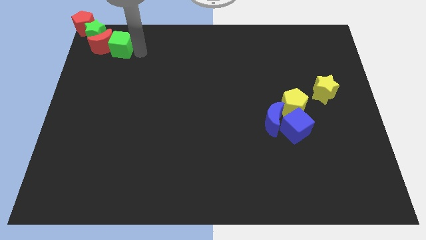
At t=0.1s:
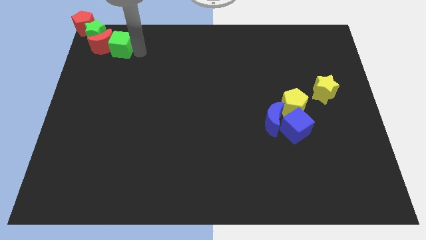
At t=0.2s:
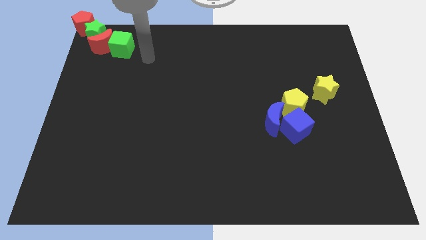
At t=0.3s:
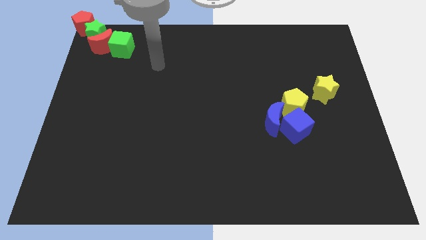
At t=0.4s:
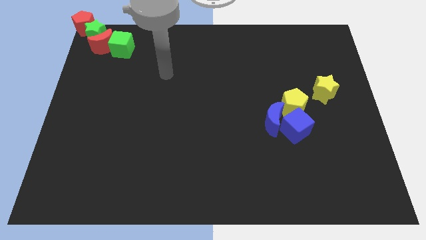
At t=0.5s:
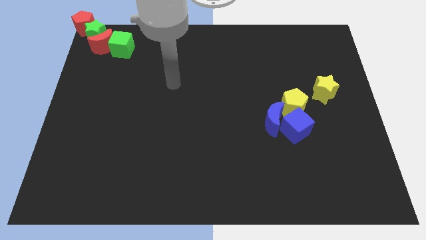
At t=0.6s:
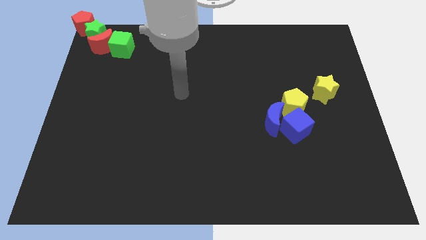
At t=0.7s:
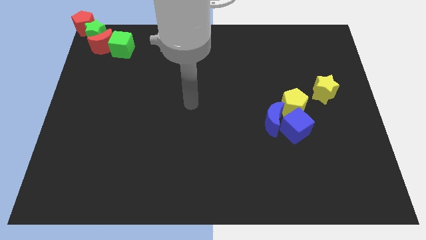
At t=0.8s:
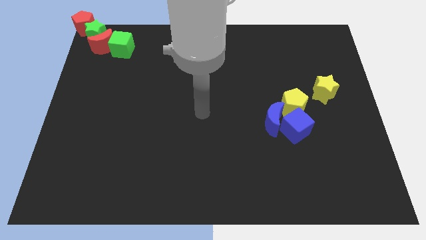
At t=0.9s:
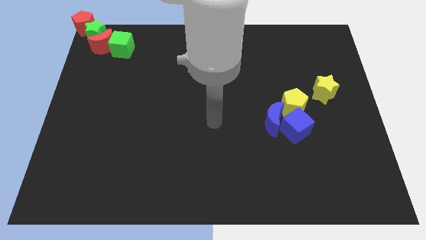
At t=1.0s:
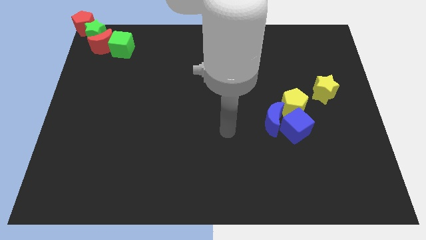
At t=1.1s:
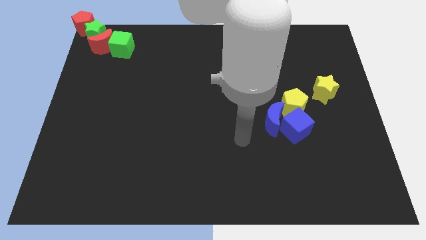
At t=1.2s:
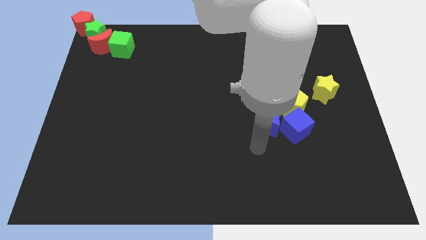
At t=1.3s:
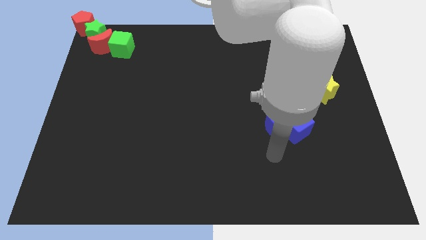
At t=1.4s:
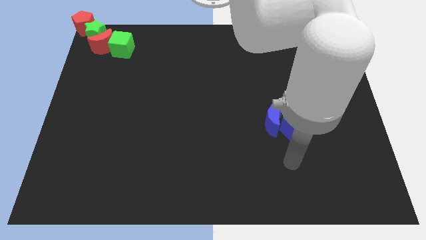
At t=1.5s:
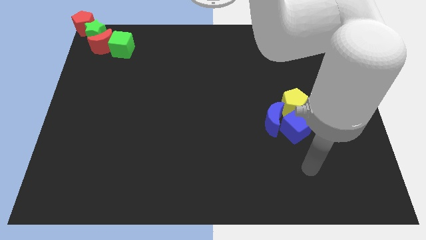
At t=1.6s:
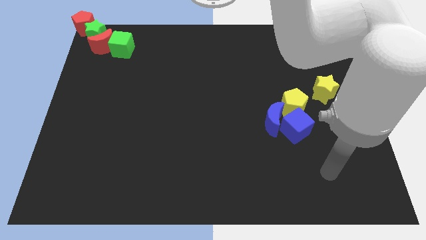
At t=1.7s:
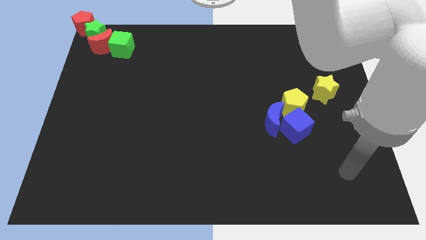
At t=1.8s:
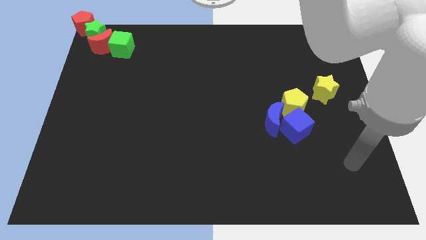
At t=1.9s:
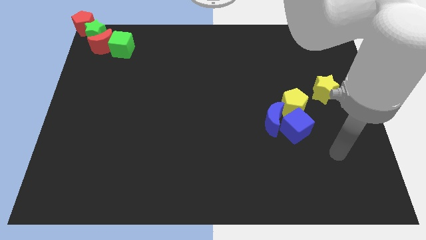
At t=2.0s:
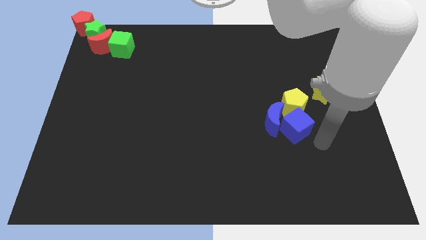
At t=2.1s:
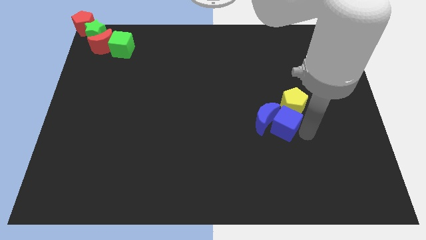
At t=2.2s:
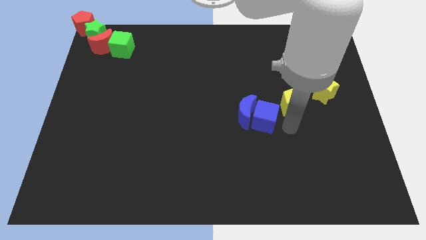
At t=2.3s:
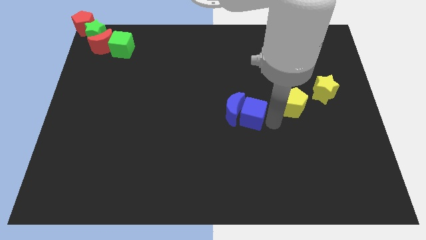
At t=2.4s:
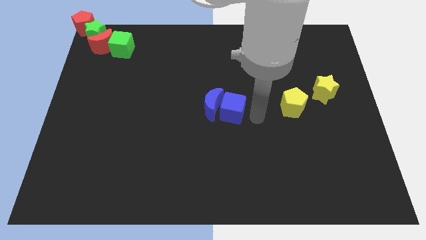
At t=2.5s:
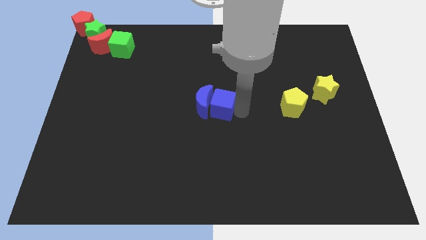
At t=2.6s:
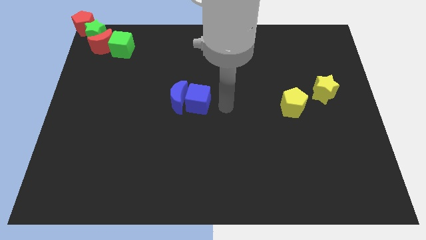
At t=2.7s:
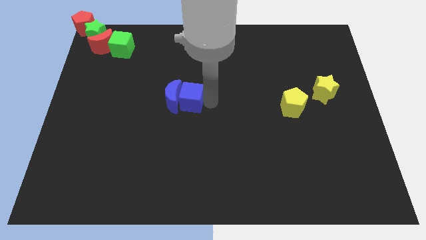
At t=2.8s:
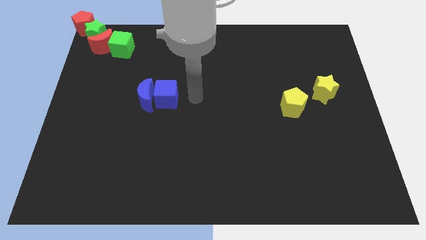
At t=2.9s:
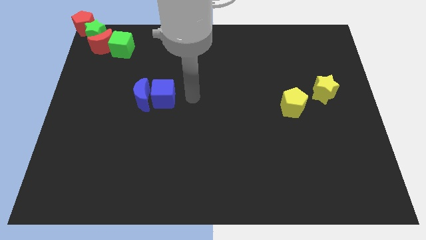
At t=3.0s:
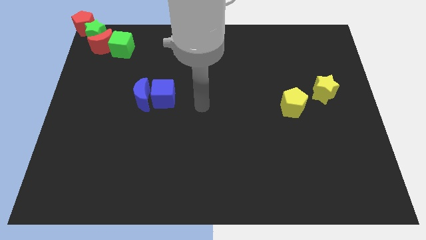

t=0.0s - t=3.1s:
separate blue blocks from yellow block

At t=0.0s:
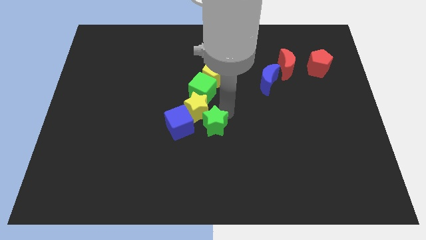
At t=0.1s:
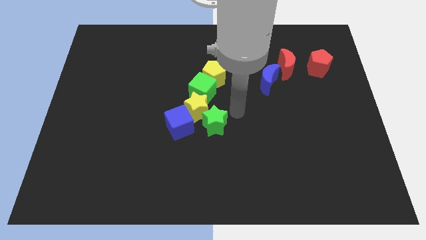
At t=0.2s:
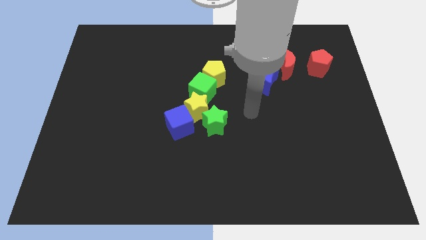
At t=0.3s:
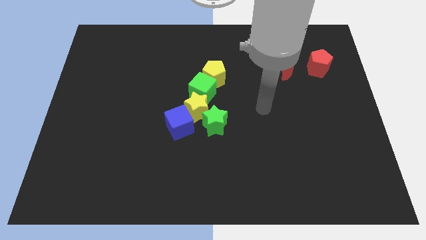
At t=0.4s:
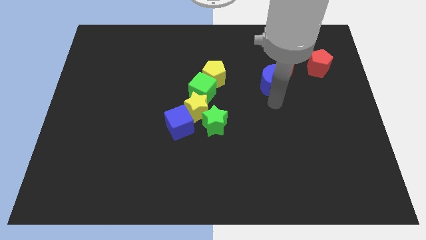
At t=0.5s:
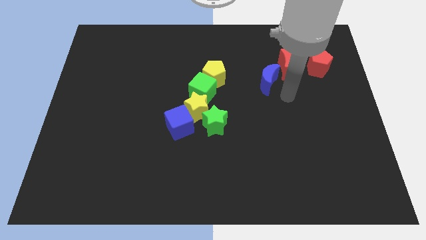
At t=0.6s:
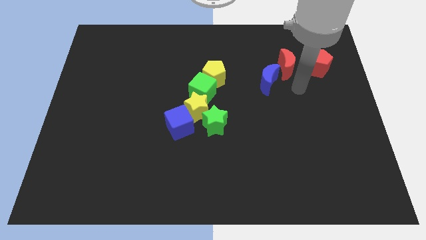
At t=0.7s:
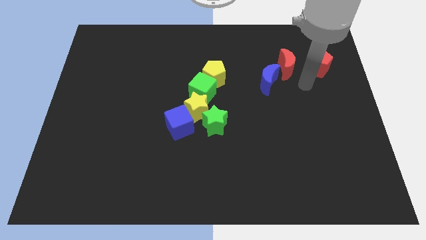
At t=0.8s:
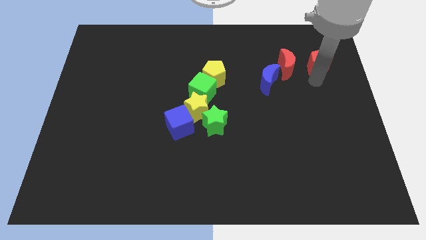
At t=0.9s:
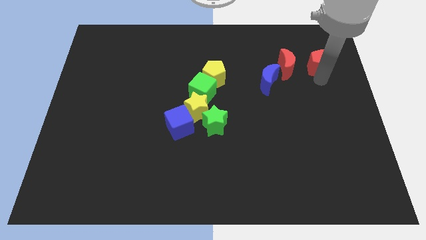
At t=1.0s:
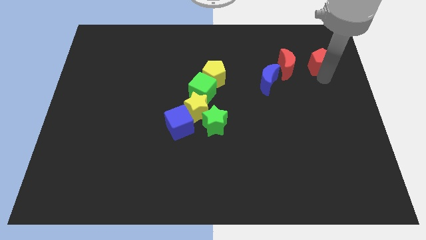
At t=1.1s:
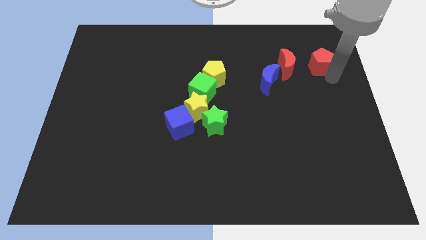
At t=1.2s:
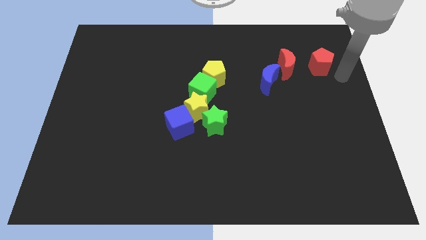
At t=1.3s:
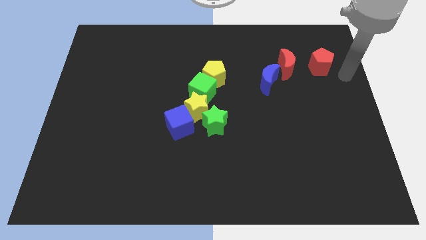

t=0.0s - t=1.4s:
touch the red pentagon at the bottom side

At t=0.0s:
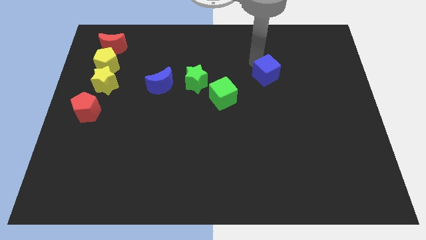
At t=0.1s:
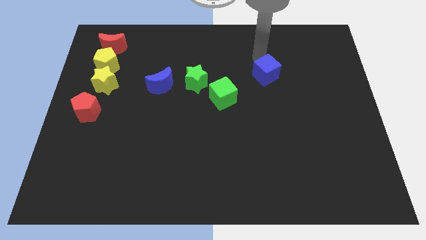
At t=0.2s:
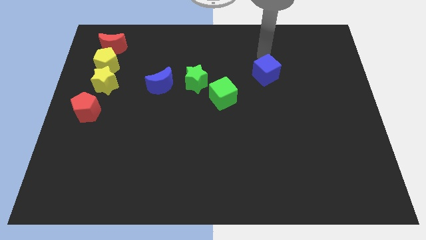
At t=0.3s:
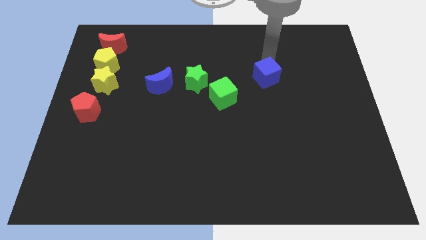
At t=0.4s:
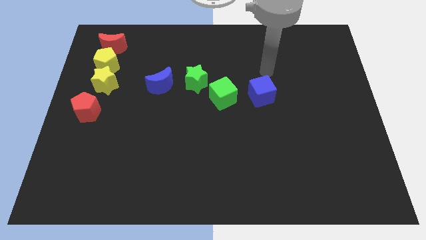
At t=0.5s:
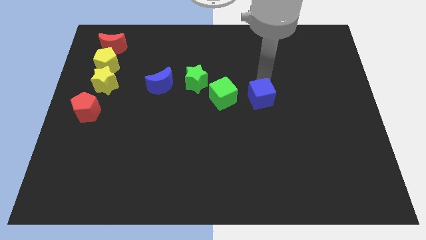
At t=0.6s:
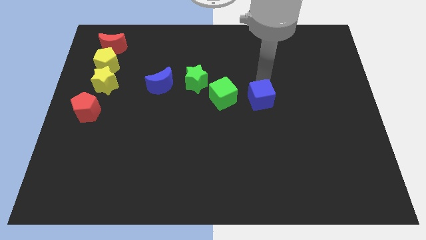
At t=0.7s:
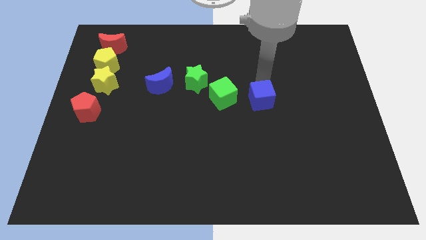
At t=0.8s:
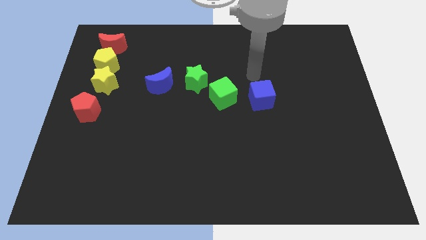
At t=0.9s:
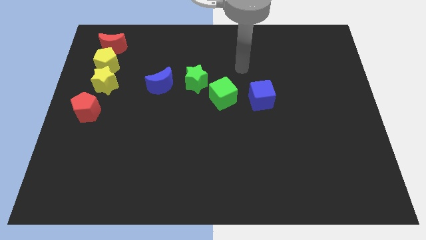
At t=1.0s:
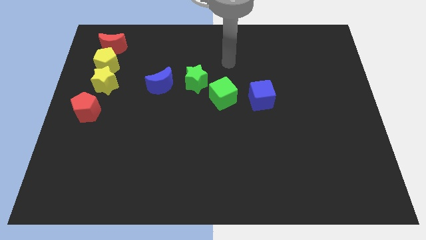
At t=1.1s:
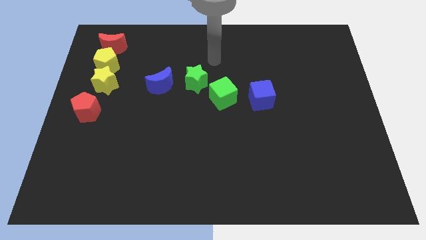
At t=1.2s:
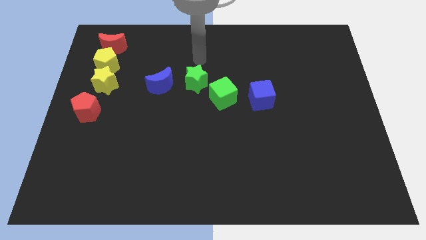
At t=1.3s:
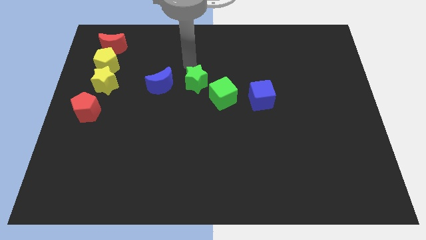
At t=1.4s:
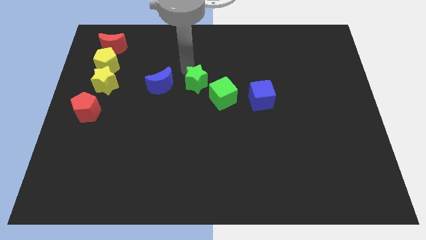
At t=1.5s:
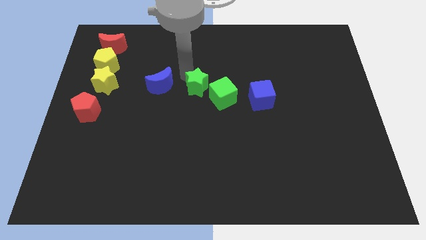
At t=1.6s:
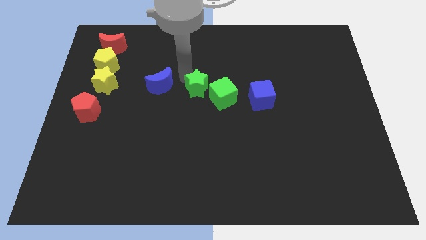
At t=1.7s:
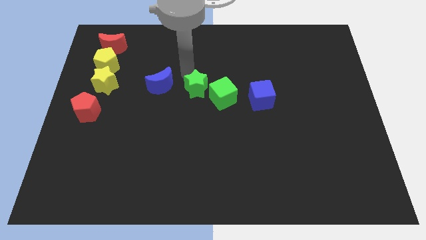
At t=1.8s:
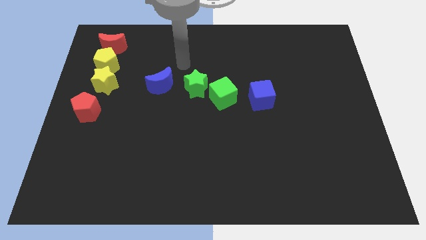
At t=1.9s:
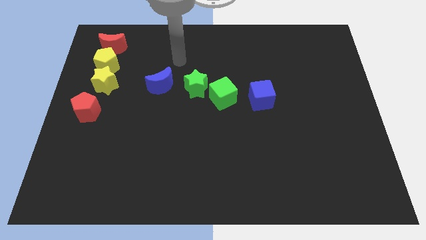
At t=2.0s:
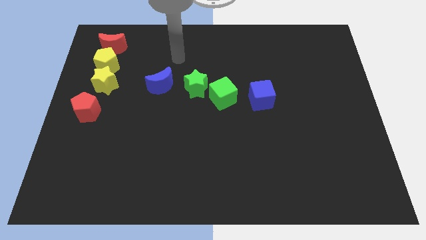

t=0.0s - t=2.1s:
place the blue cube to the right of the green cube

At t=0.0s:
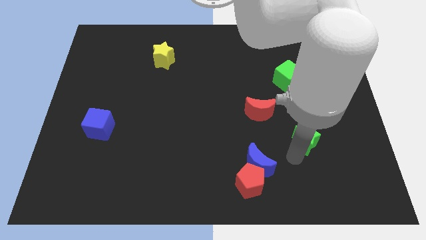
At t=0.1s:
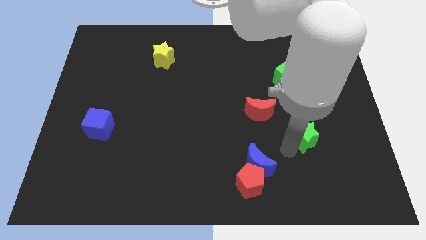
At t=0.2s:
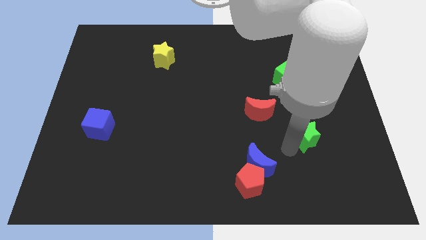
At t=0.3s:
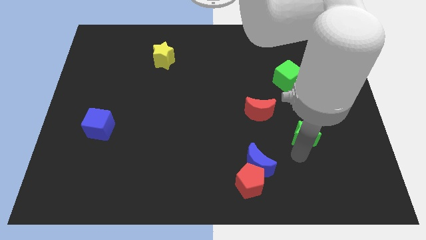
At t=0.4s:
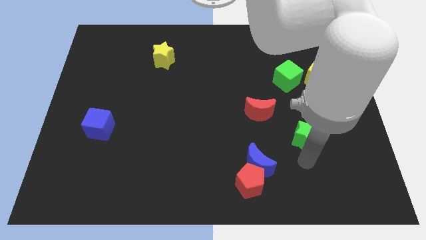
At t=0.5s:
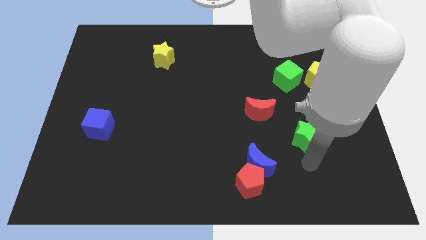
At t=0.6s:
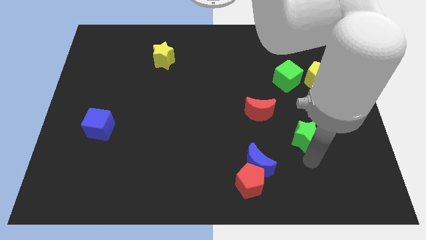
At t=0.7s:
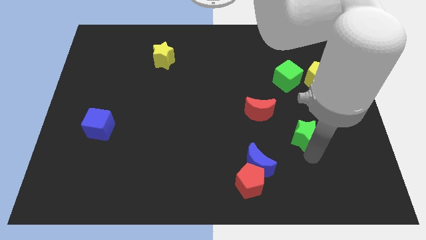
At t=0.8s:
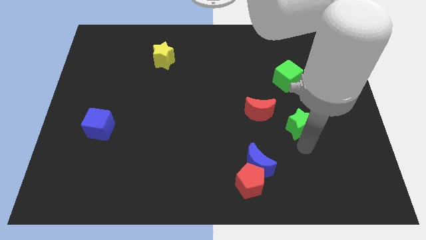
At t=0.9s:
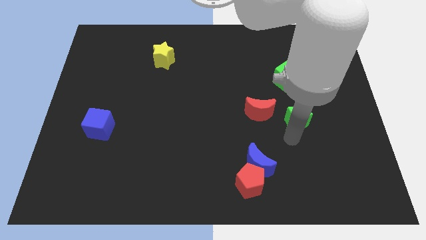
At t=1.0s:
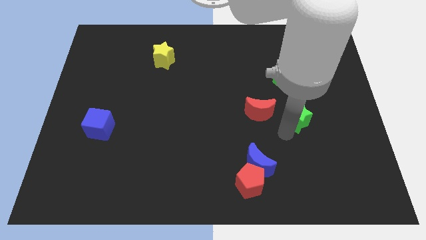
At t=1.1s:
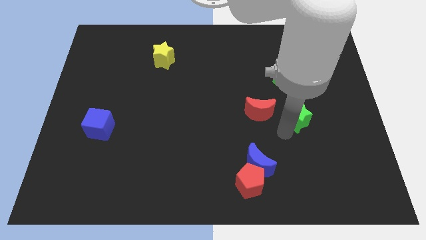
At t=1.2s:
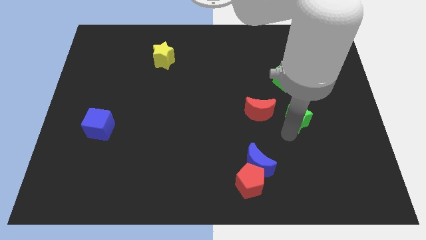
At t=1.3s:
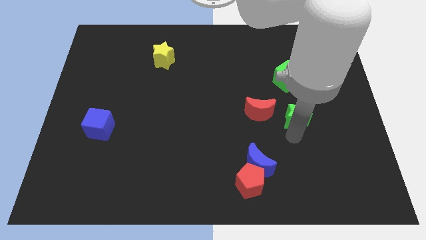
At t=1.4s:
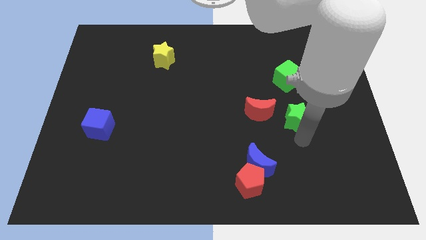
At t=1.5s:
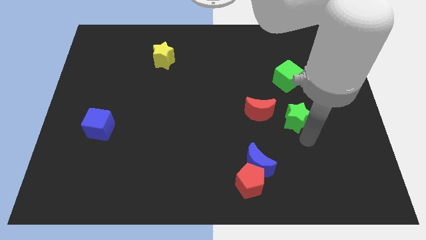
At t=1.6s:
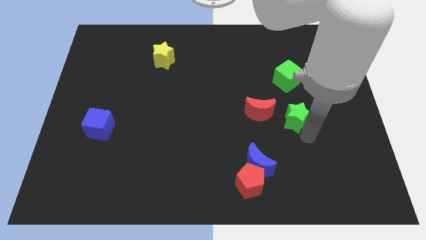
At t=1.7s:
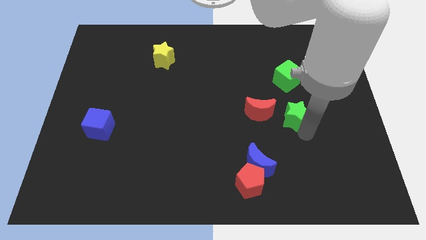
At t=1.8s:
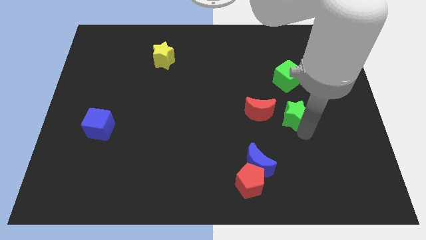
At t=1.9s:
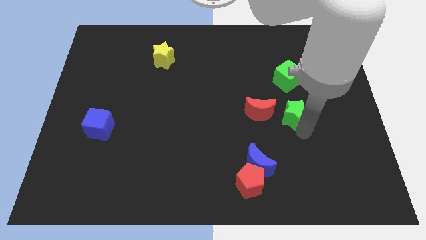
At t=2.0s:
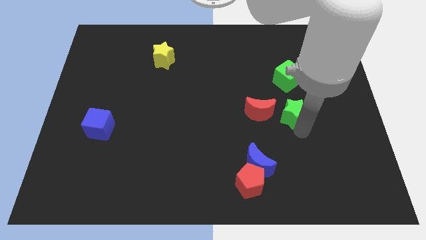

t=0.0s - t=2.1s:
move green star to the right of red moon
